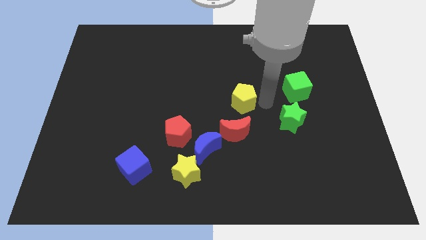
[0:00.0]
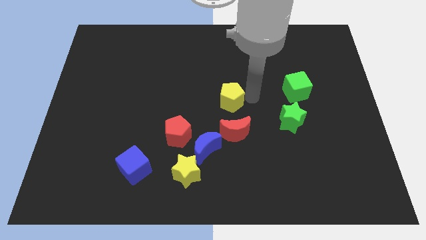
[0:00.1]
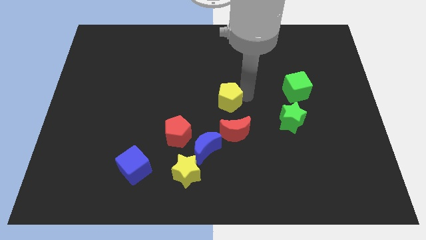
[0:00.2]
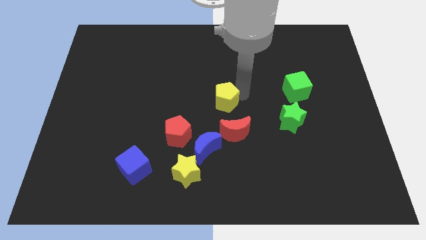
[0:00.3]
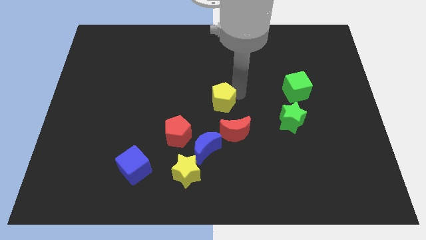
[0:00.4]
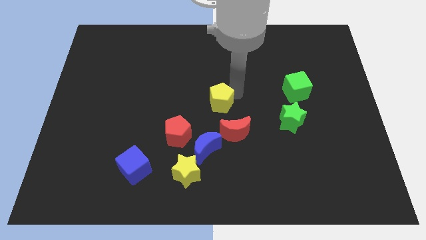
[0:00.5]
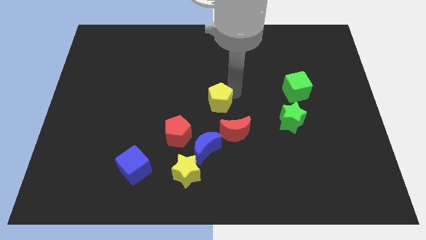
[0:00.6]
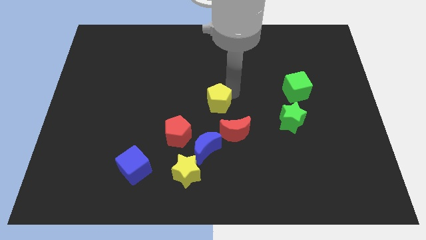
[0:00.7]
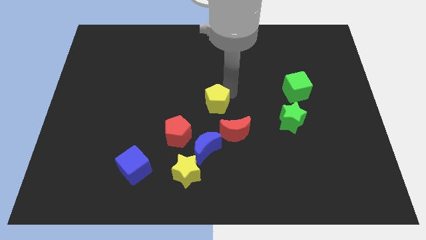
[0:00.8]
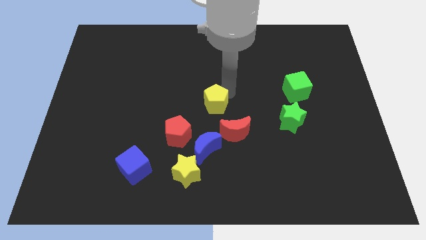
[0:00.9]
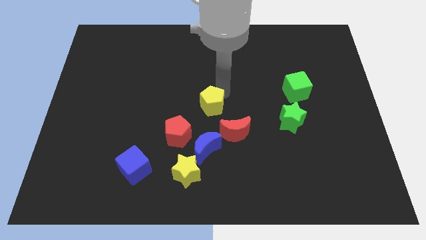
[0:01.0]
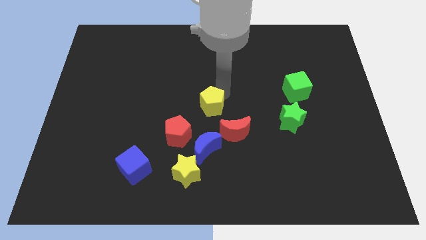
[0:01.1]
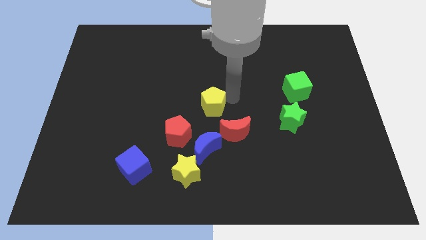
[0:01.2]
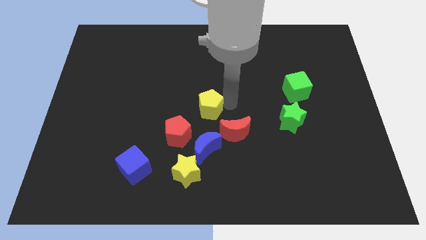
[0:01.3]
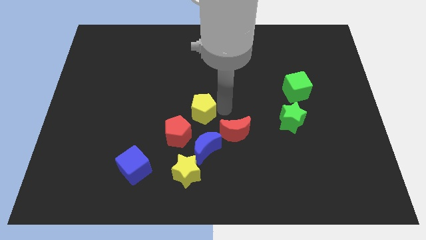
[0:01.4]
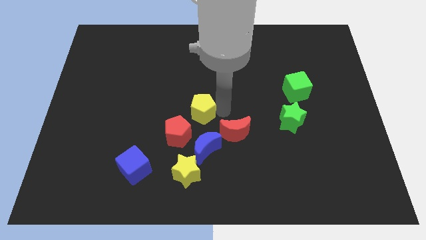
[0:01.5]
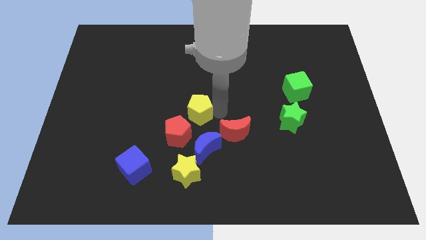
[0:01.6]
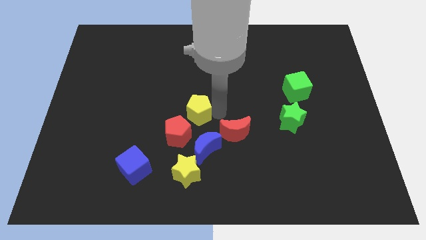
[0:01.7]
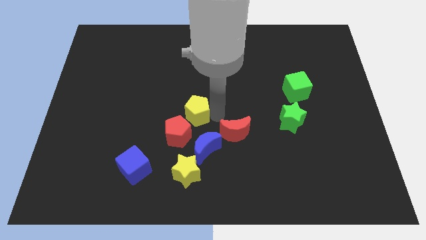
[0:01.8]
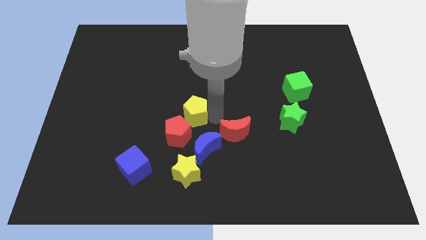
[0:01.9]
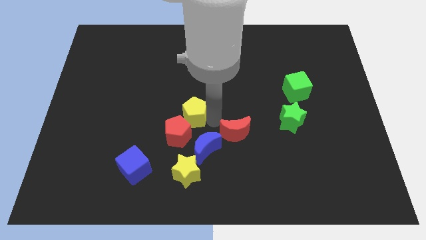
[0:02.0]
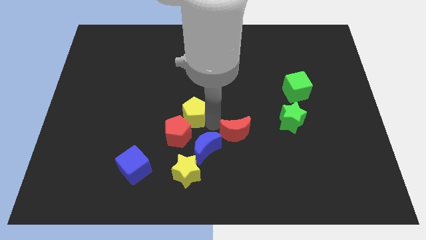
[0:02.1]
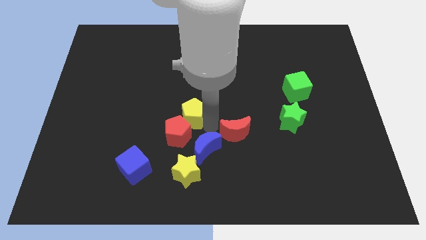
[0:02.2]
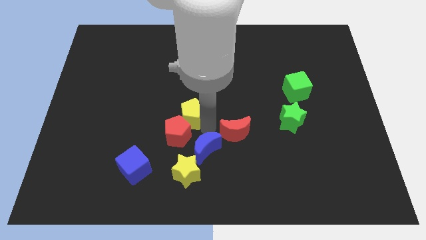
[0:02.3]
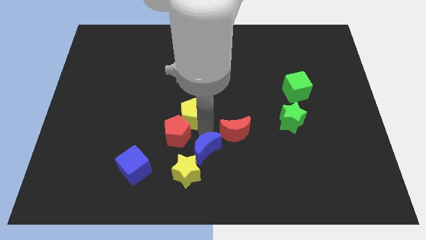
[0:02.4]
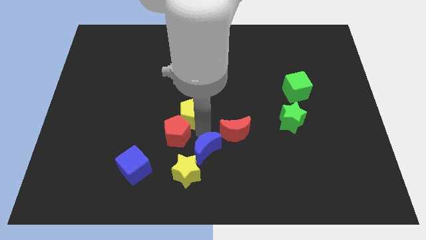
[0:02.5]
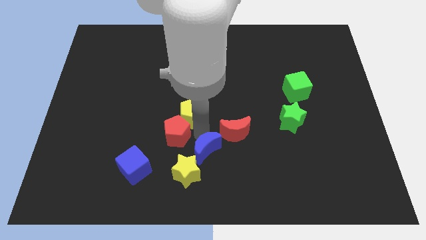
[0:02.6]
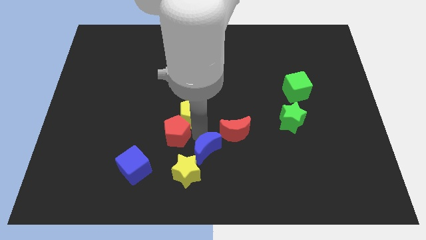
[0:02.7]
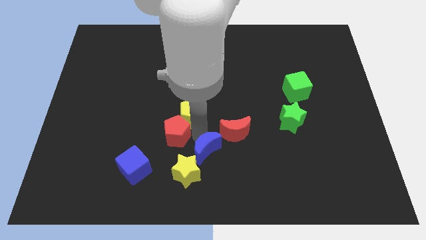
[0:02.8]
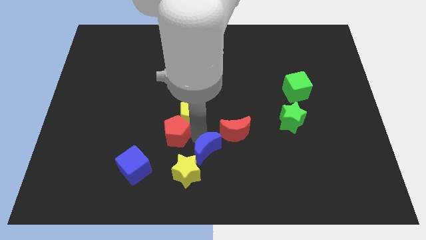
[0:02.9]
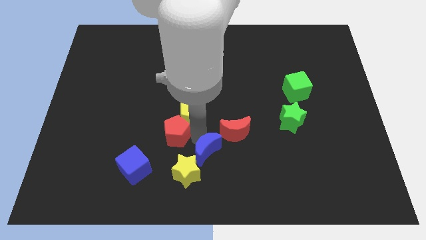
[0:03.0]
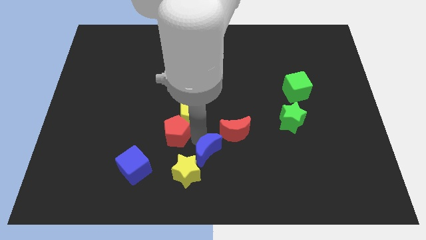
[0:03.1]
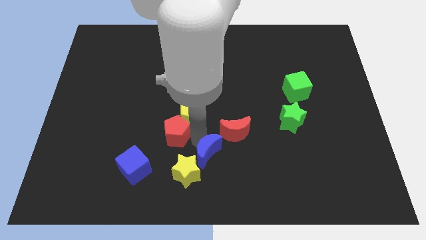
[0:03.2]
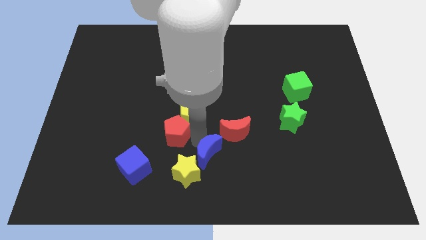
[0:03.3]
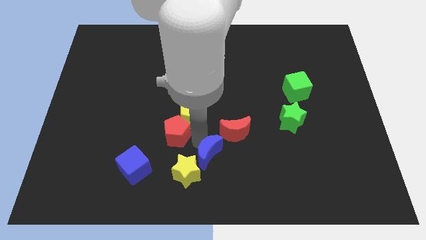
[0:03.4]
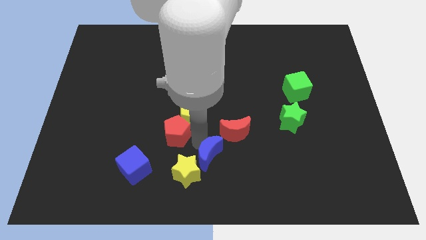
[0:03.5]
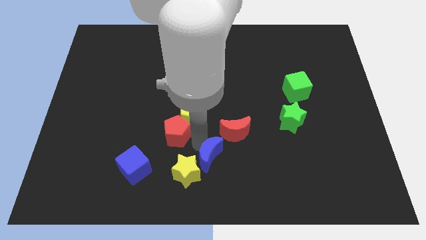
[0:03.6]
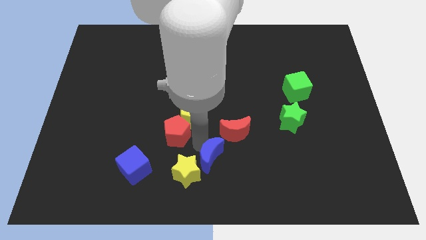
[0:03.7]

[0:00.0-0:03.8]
push the yellow pentagon towards the red pentagon

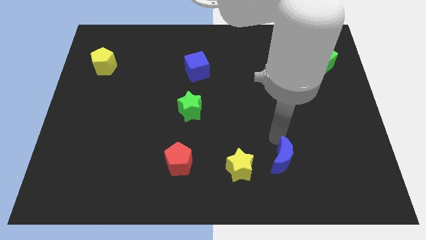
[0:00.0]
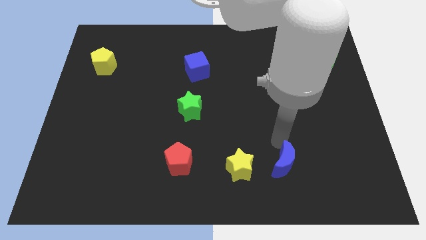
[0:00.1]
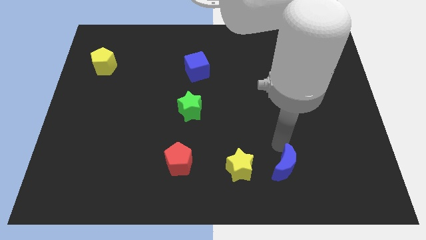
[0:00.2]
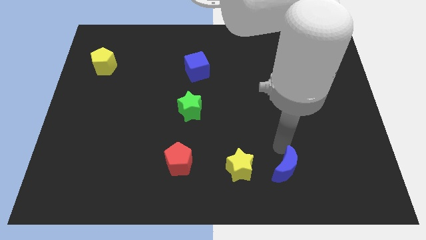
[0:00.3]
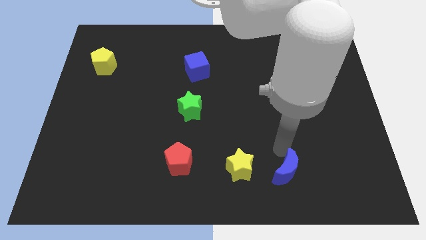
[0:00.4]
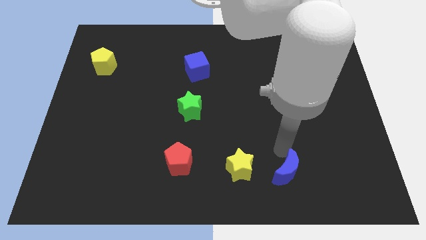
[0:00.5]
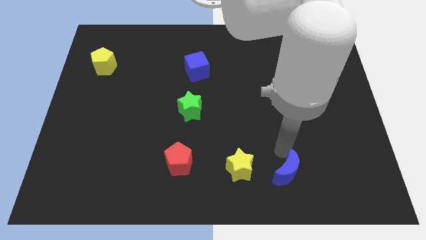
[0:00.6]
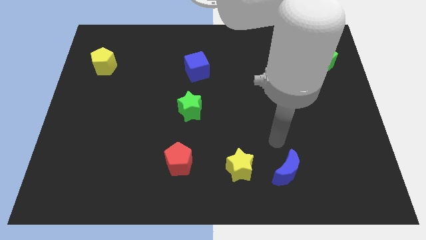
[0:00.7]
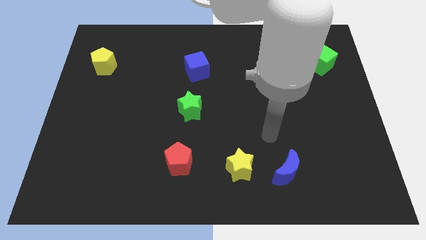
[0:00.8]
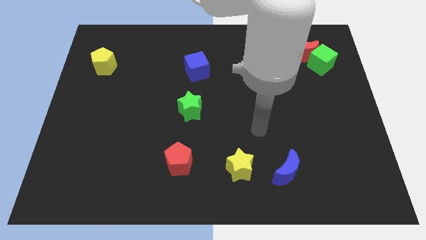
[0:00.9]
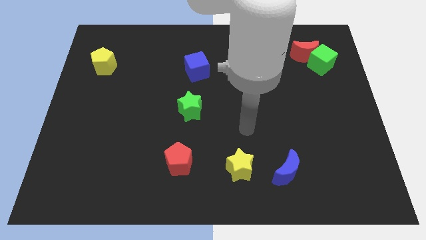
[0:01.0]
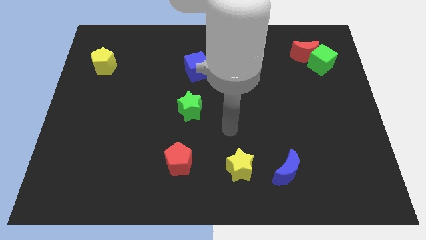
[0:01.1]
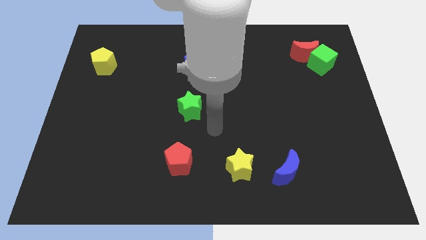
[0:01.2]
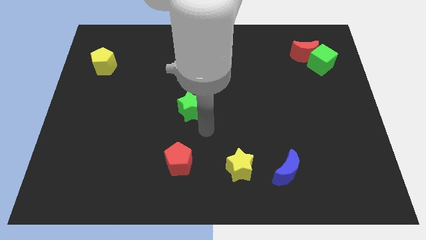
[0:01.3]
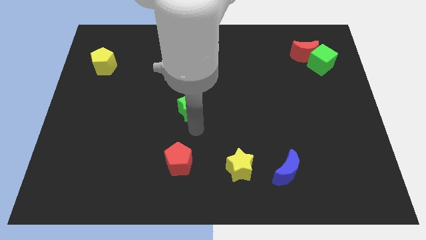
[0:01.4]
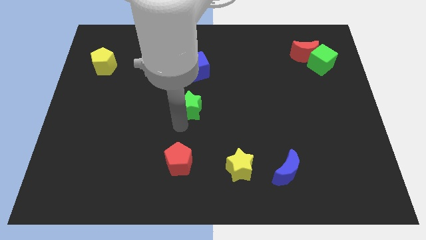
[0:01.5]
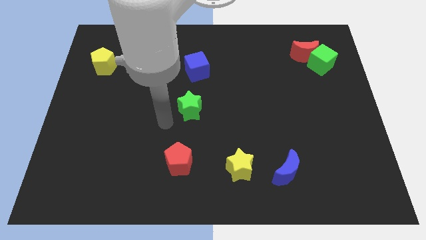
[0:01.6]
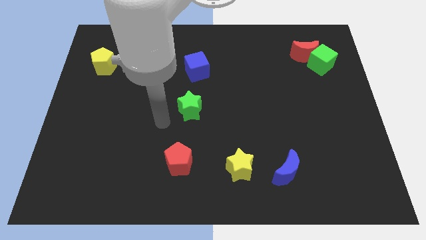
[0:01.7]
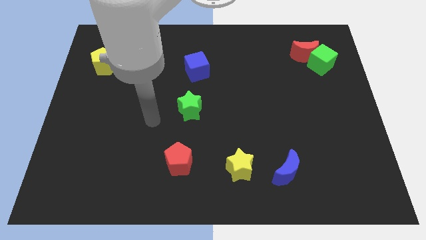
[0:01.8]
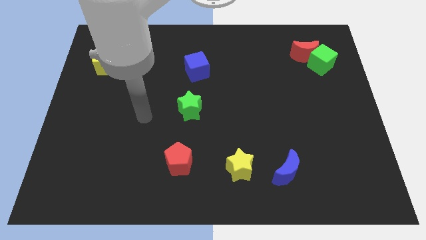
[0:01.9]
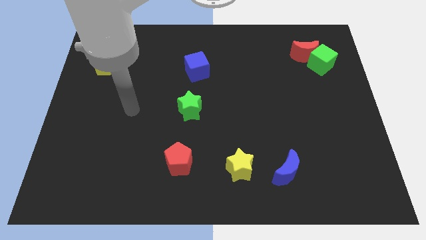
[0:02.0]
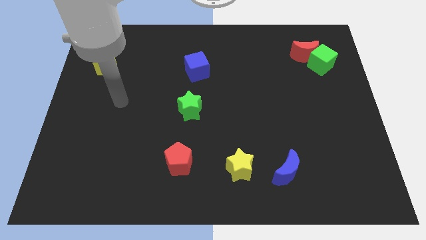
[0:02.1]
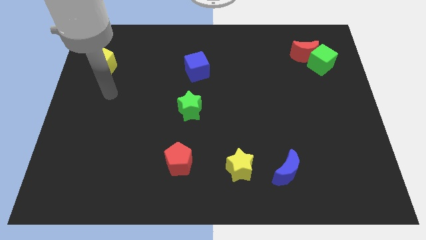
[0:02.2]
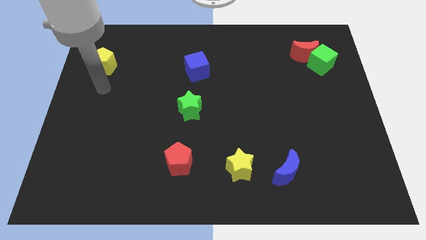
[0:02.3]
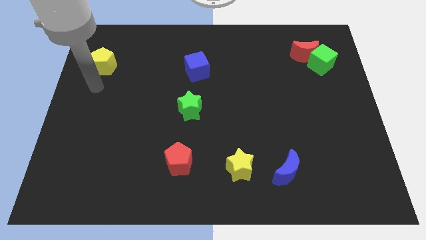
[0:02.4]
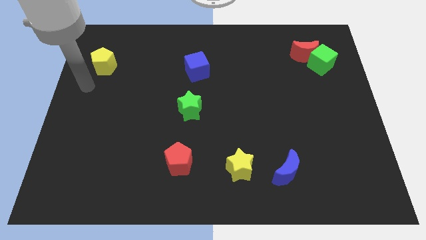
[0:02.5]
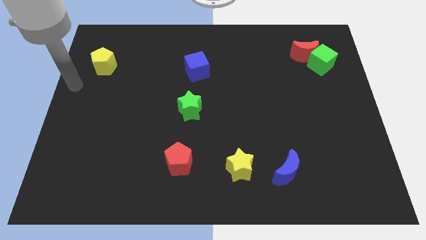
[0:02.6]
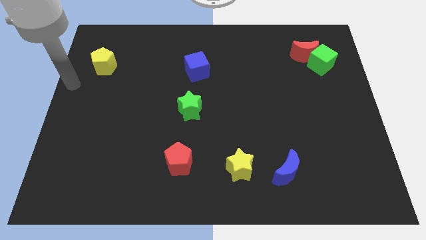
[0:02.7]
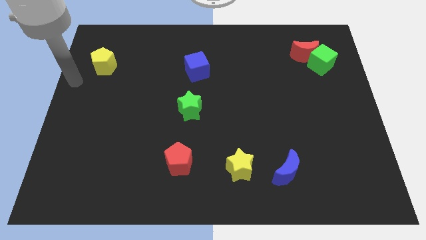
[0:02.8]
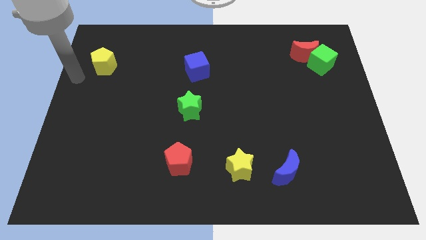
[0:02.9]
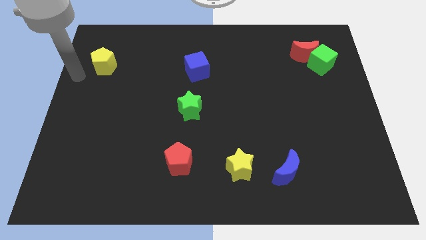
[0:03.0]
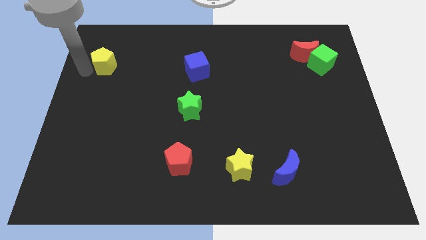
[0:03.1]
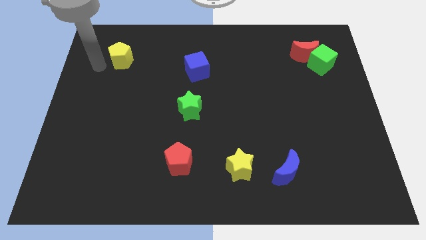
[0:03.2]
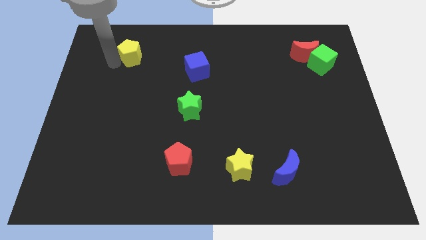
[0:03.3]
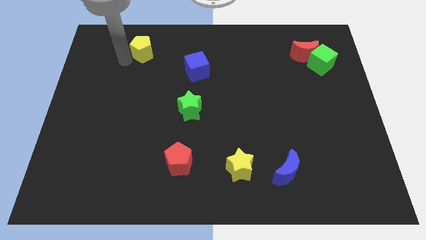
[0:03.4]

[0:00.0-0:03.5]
move the arm to the left of the yellow pentagon

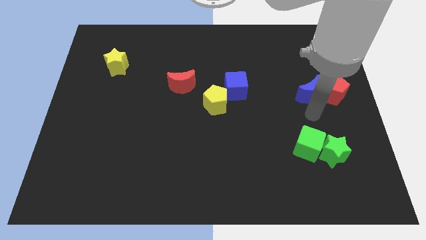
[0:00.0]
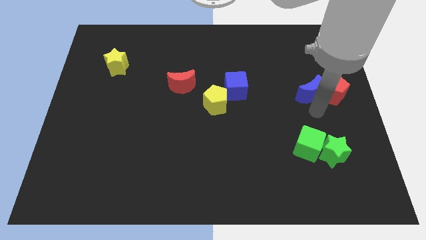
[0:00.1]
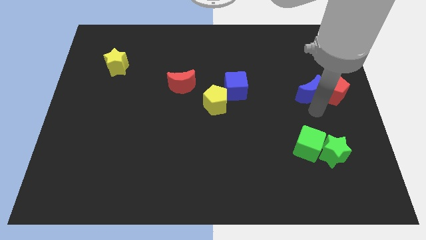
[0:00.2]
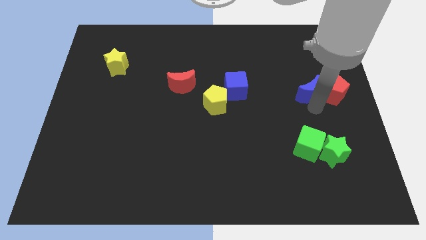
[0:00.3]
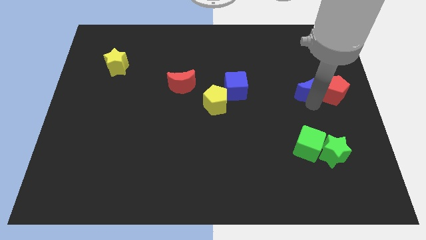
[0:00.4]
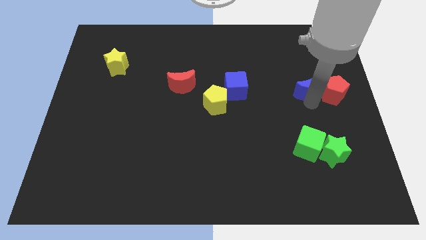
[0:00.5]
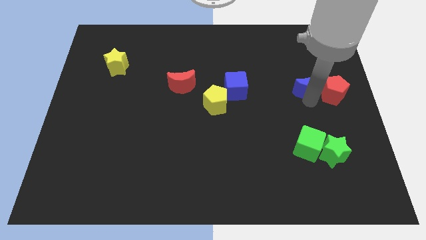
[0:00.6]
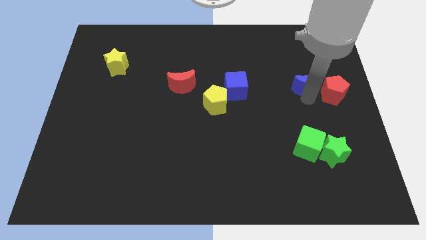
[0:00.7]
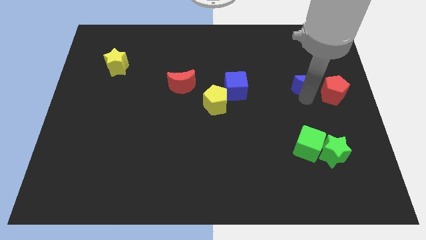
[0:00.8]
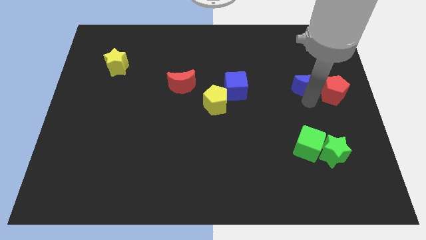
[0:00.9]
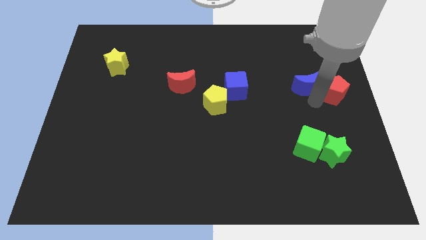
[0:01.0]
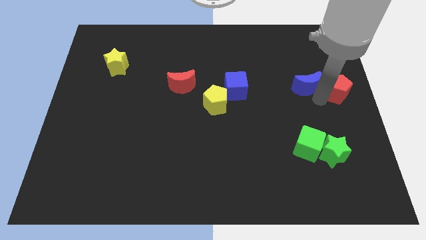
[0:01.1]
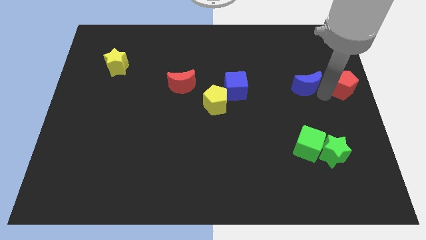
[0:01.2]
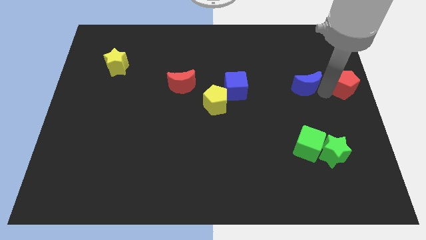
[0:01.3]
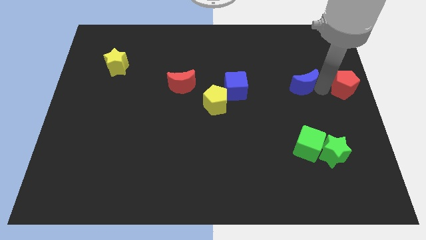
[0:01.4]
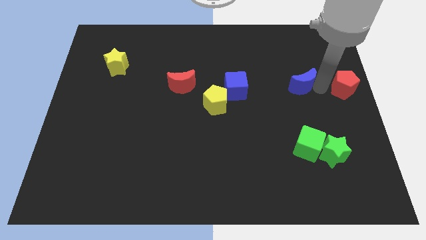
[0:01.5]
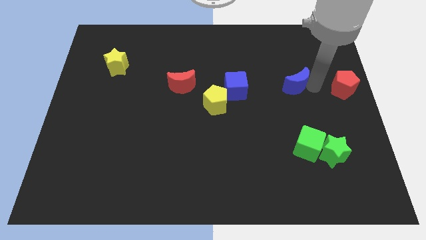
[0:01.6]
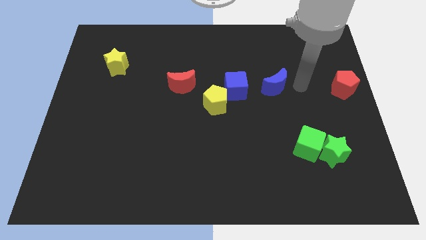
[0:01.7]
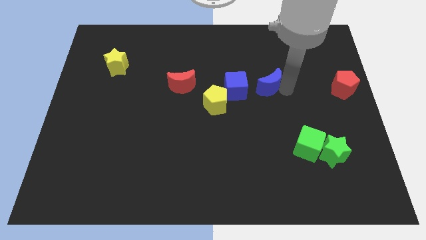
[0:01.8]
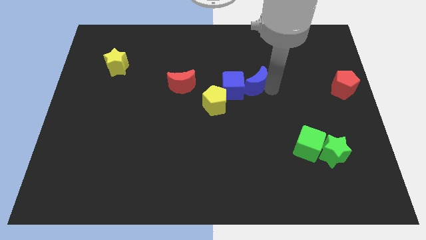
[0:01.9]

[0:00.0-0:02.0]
push the blue crescent to the right side the blue cube
